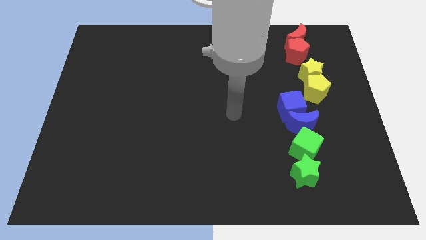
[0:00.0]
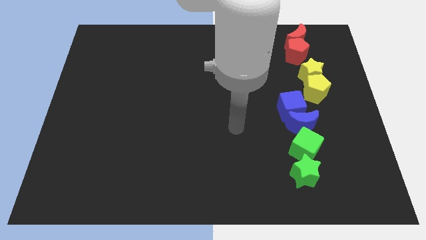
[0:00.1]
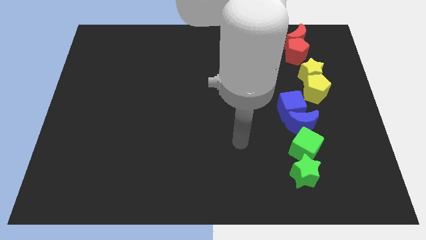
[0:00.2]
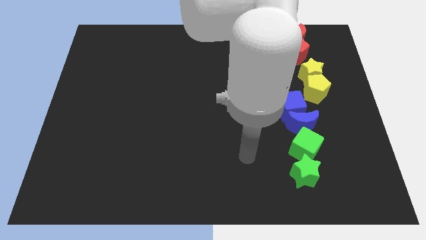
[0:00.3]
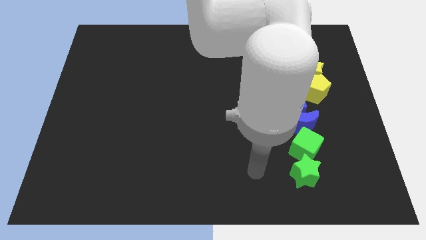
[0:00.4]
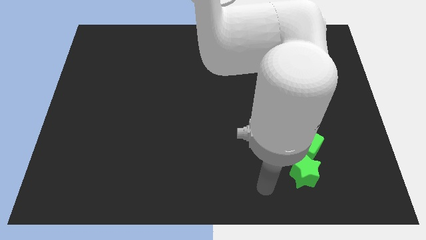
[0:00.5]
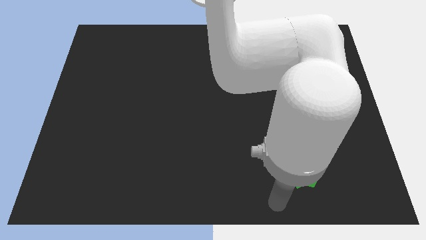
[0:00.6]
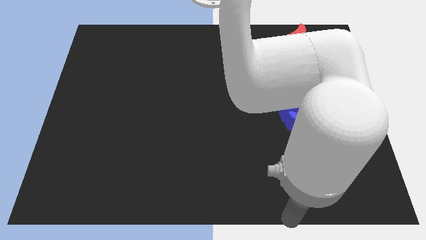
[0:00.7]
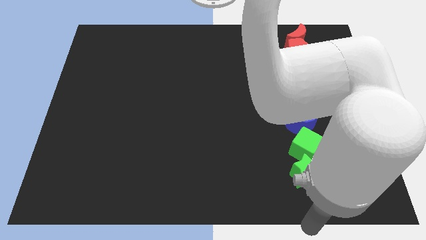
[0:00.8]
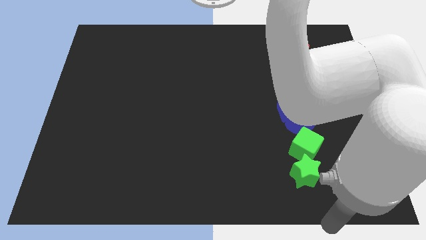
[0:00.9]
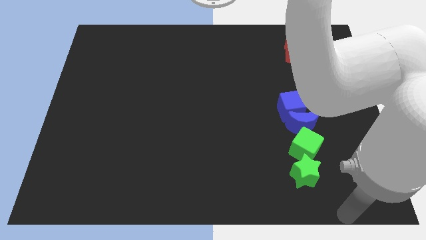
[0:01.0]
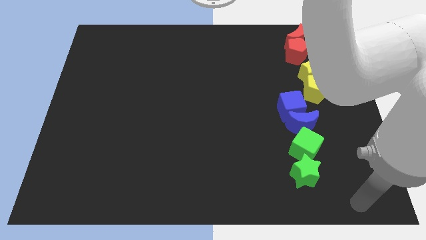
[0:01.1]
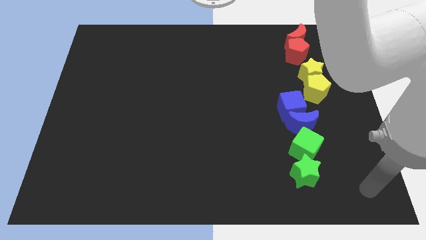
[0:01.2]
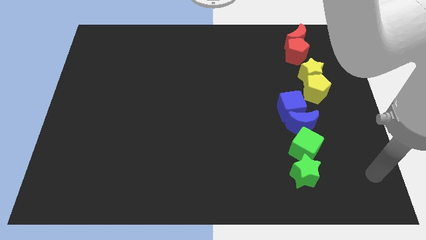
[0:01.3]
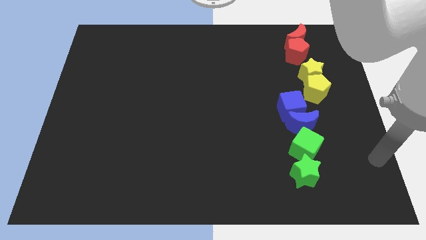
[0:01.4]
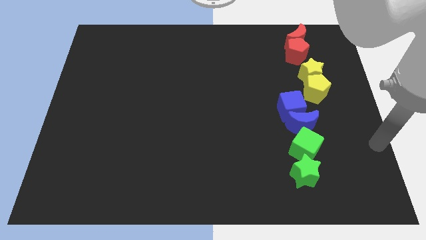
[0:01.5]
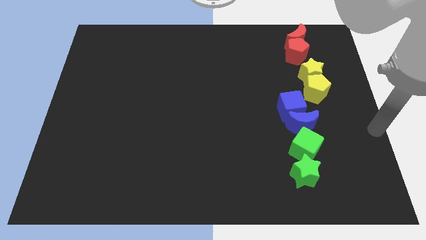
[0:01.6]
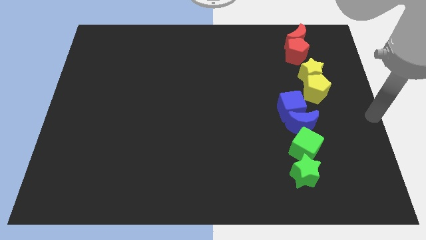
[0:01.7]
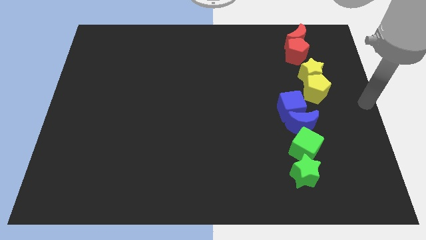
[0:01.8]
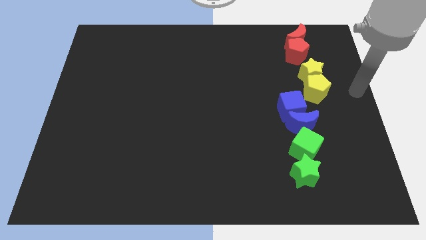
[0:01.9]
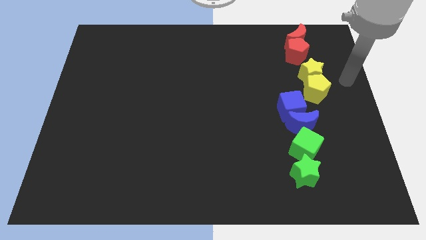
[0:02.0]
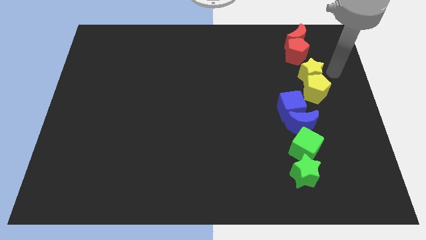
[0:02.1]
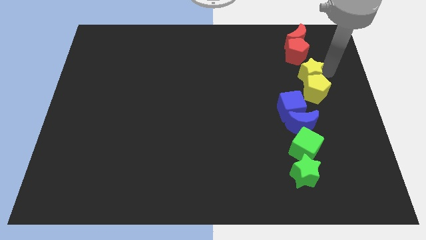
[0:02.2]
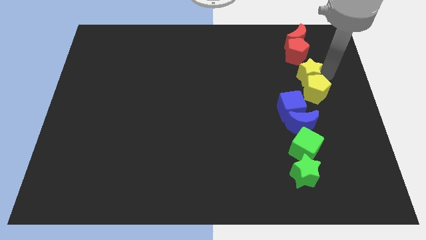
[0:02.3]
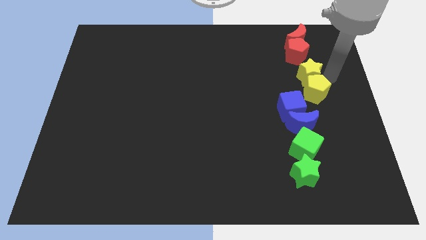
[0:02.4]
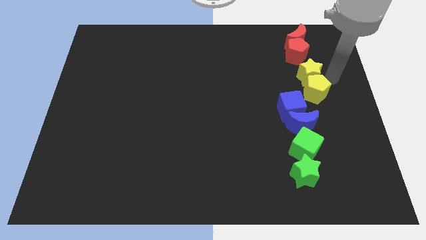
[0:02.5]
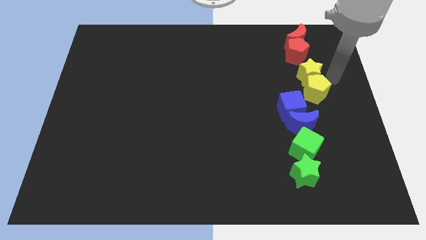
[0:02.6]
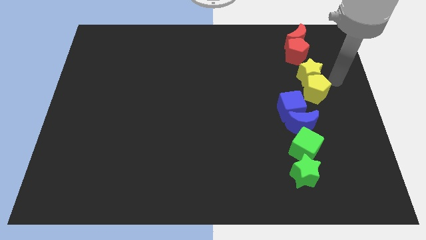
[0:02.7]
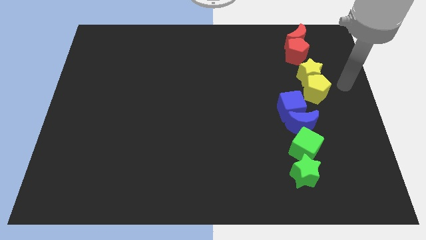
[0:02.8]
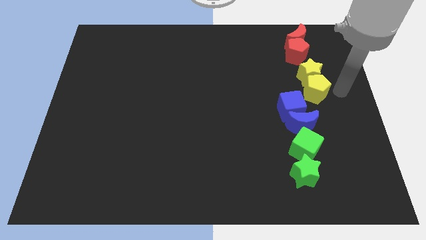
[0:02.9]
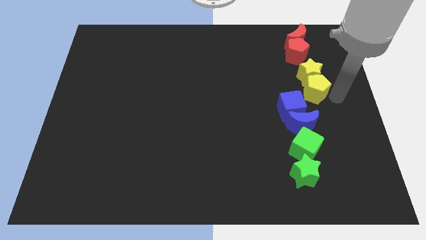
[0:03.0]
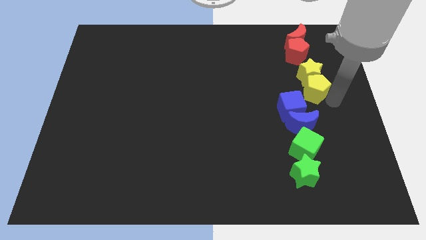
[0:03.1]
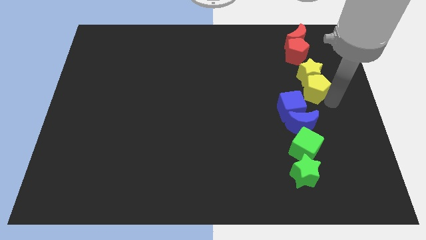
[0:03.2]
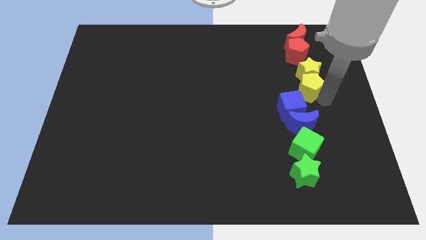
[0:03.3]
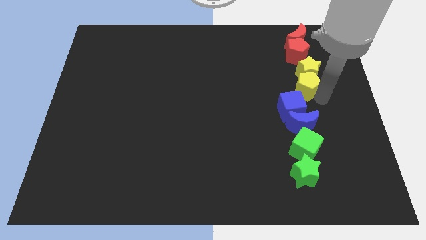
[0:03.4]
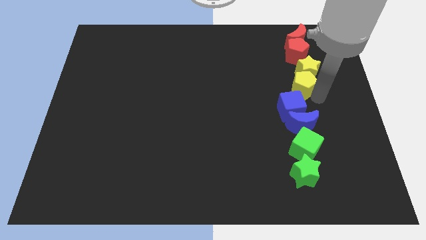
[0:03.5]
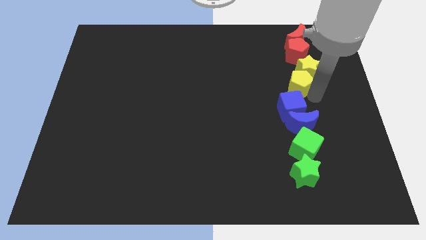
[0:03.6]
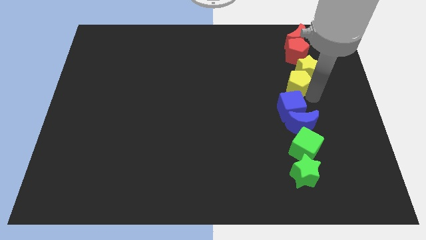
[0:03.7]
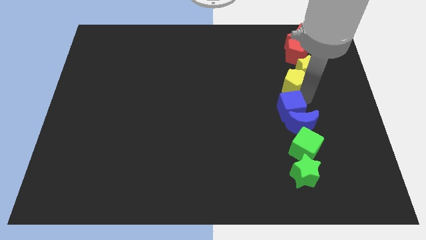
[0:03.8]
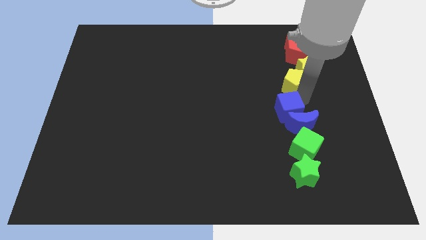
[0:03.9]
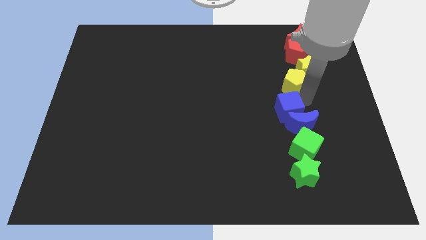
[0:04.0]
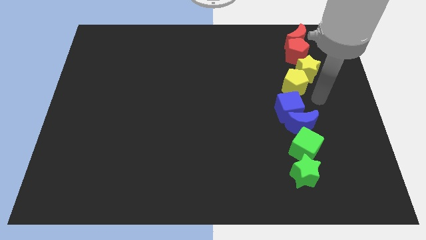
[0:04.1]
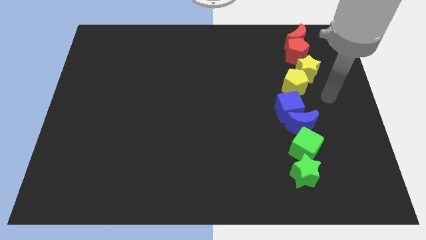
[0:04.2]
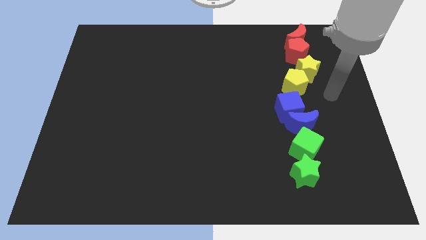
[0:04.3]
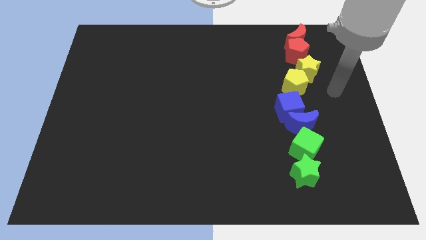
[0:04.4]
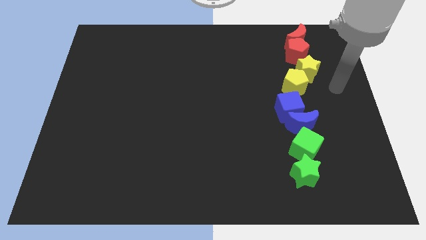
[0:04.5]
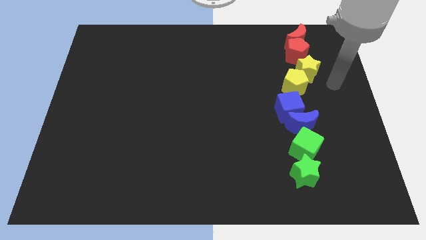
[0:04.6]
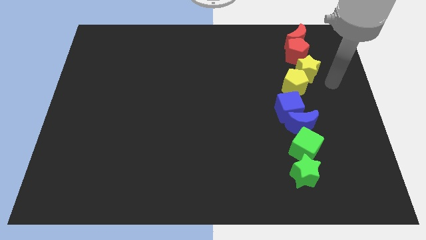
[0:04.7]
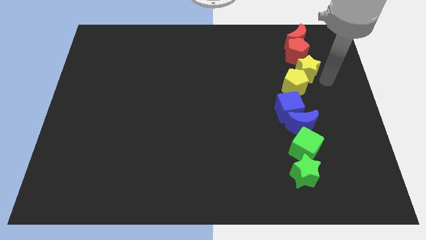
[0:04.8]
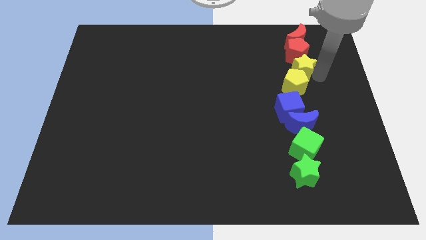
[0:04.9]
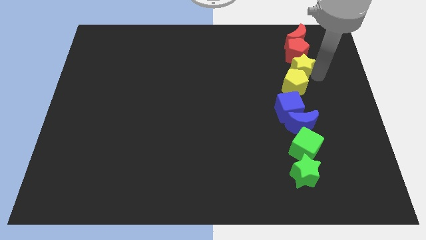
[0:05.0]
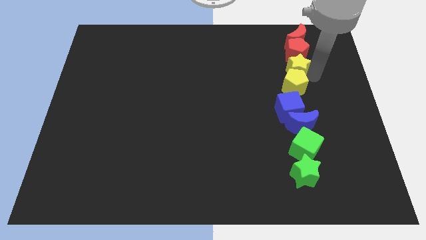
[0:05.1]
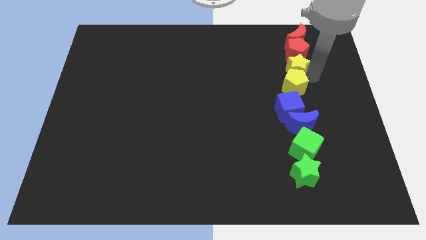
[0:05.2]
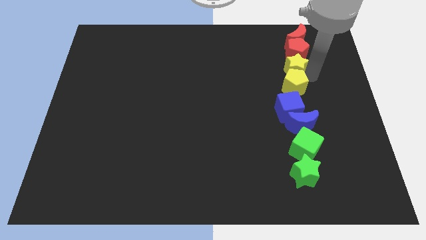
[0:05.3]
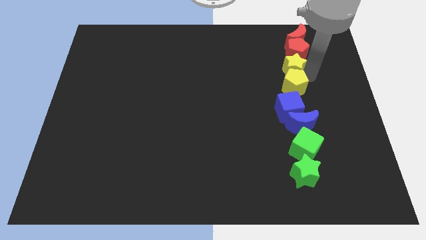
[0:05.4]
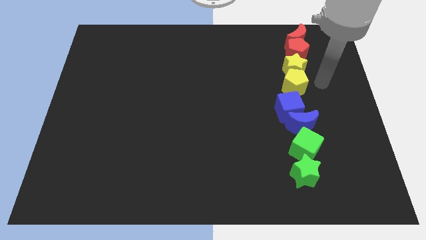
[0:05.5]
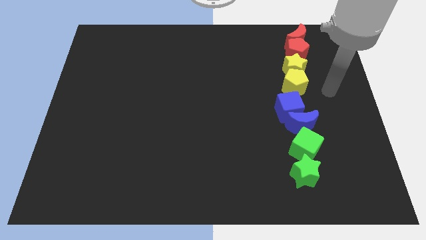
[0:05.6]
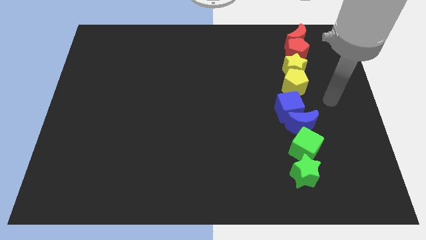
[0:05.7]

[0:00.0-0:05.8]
move the yellow blocks in between the red pentagon and blue cube

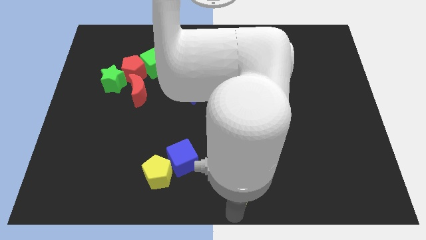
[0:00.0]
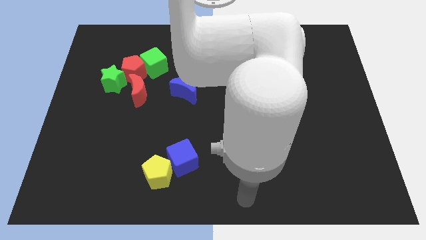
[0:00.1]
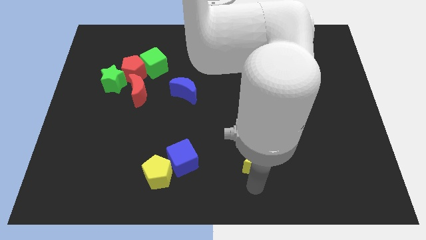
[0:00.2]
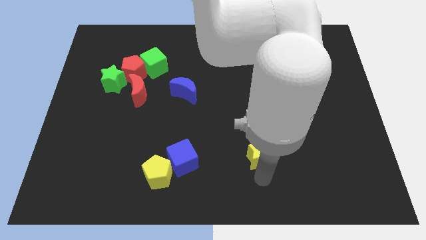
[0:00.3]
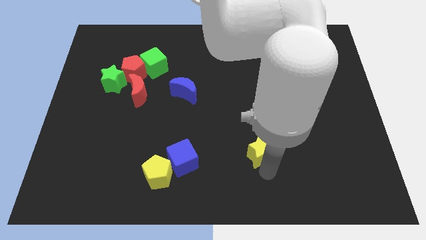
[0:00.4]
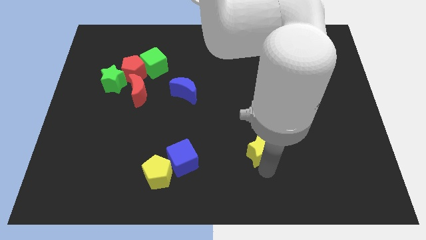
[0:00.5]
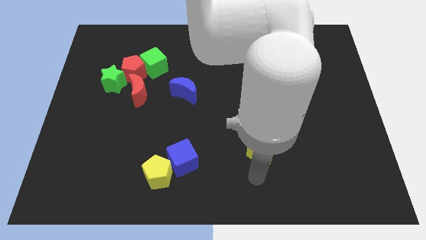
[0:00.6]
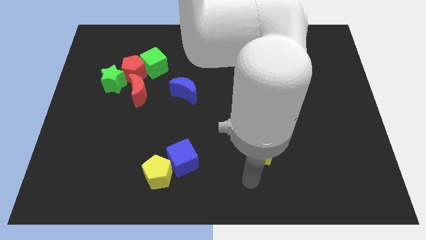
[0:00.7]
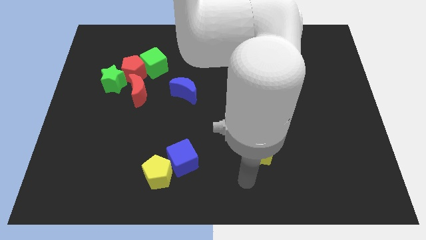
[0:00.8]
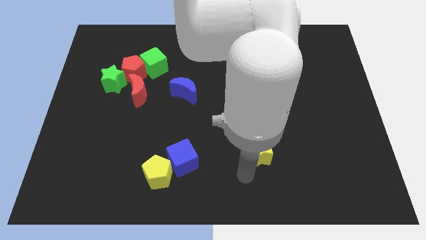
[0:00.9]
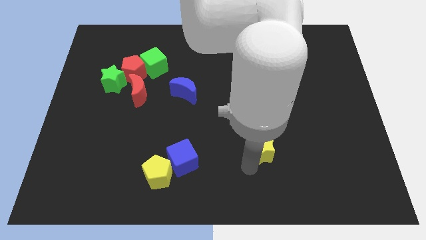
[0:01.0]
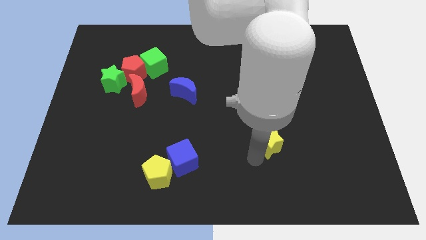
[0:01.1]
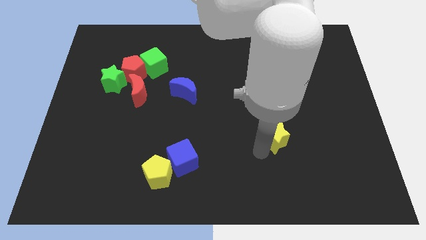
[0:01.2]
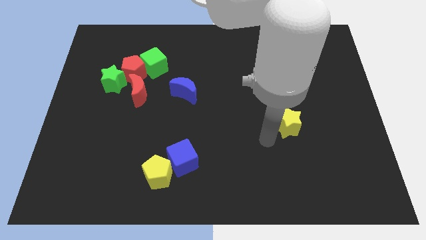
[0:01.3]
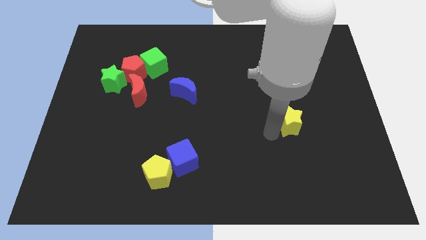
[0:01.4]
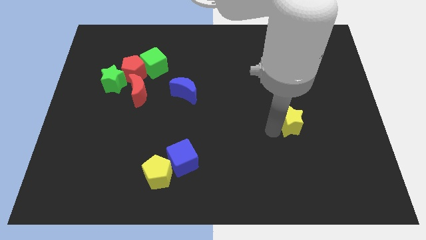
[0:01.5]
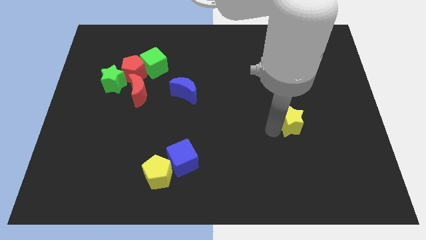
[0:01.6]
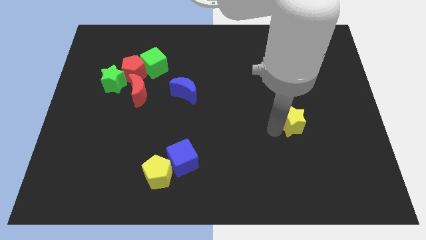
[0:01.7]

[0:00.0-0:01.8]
place the yellow star right to the blue cube

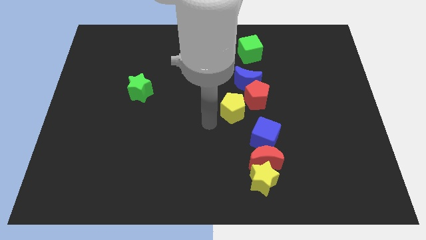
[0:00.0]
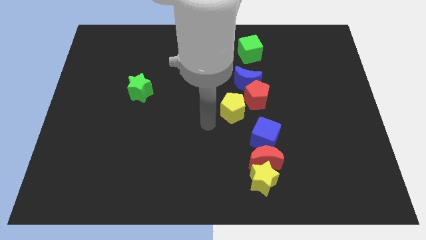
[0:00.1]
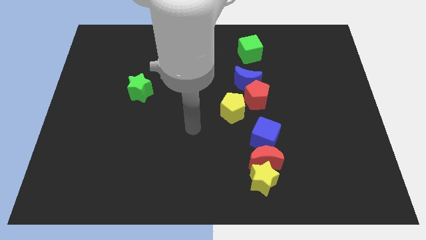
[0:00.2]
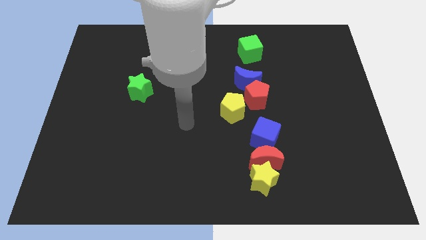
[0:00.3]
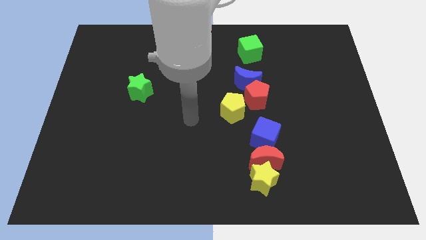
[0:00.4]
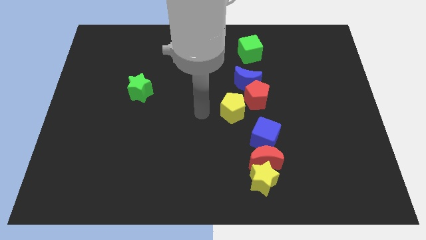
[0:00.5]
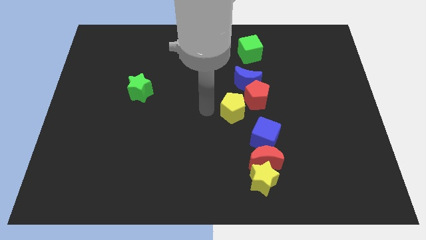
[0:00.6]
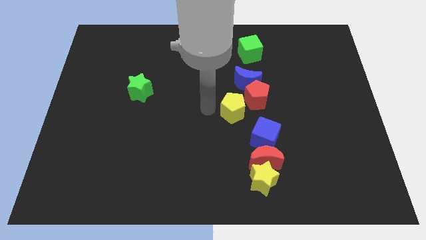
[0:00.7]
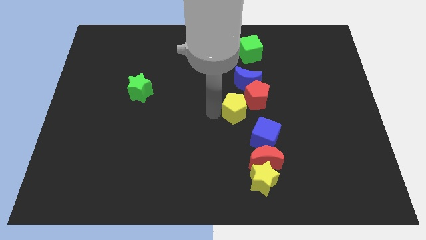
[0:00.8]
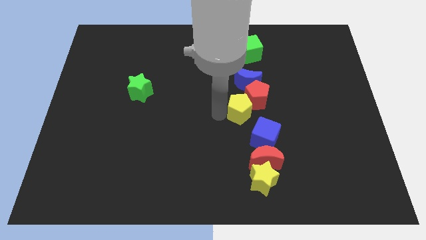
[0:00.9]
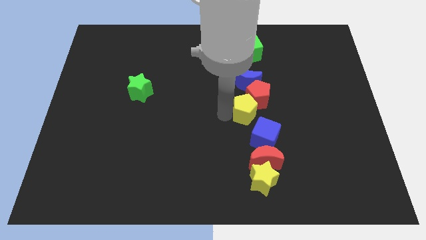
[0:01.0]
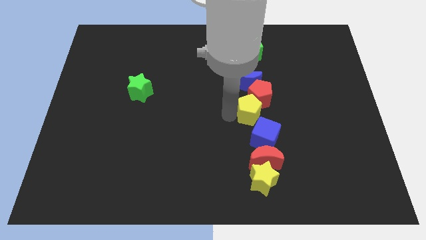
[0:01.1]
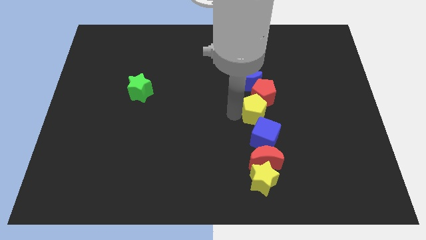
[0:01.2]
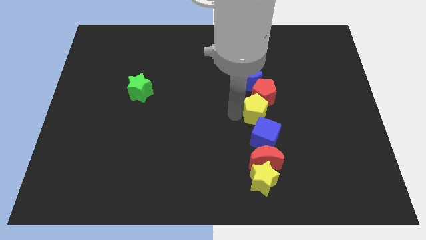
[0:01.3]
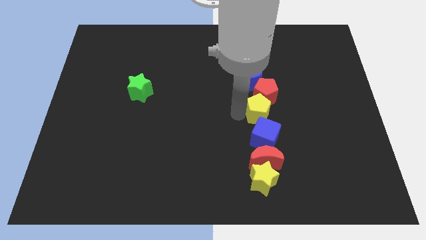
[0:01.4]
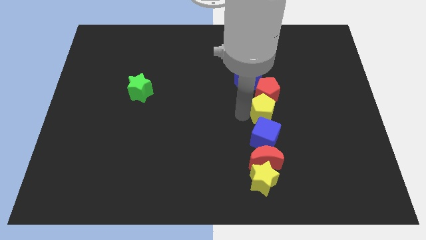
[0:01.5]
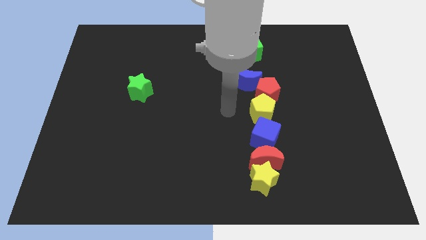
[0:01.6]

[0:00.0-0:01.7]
push the yellow pentagon into the red pentagon
